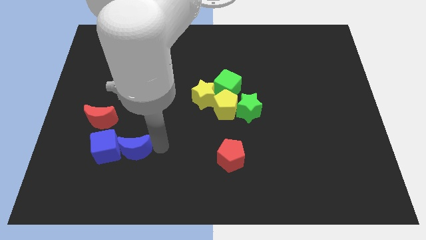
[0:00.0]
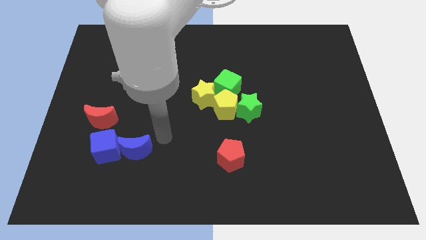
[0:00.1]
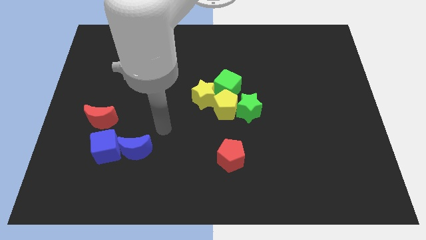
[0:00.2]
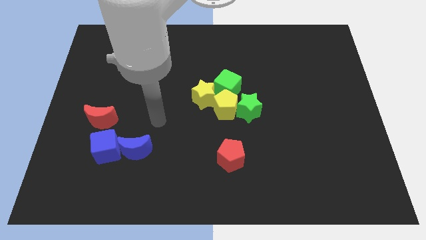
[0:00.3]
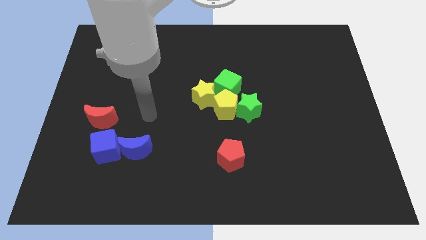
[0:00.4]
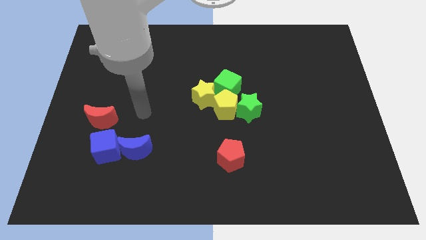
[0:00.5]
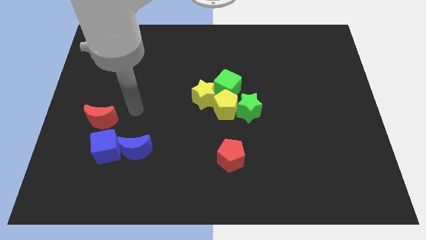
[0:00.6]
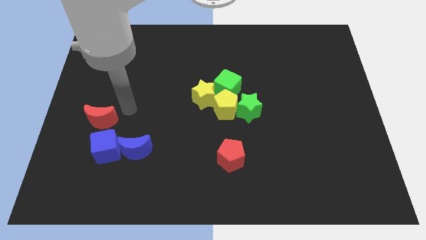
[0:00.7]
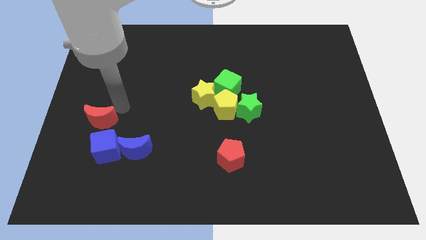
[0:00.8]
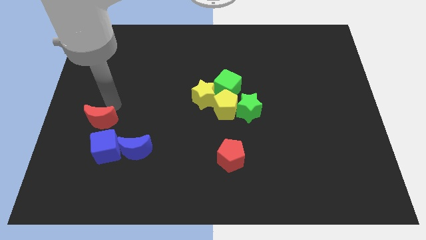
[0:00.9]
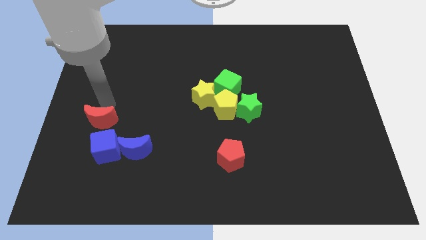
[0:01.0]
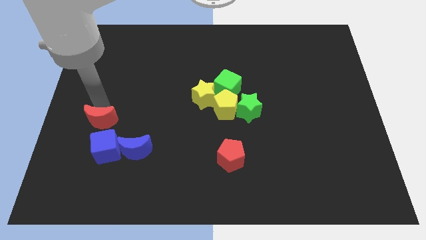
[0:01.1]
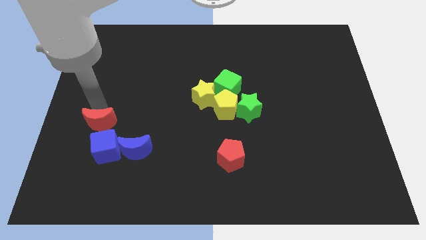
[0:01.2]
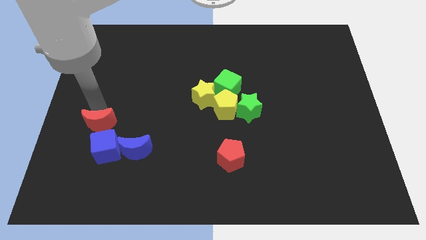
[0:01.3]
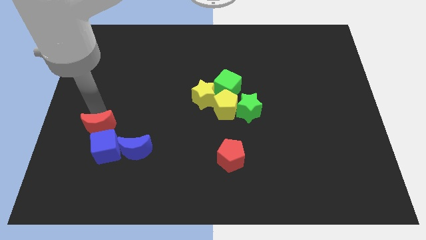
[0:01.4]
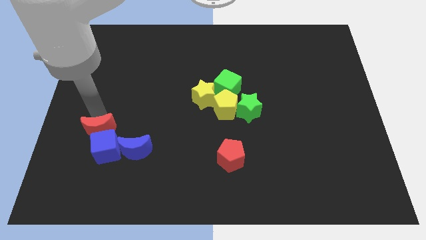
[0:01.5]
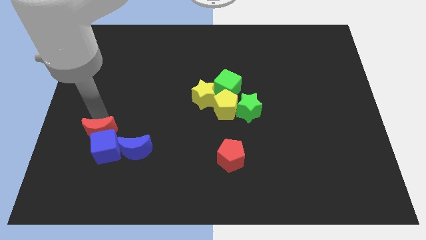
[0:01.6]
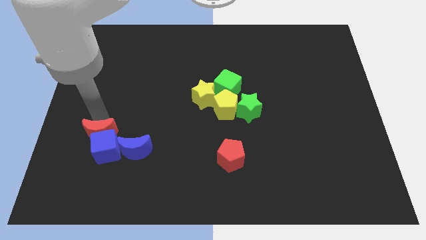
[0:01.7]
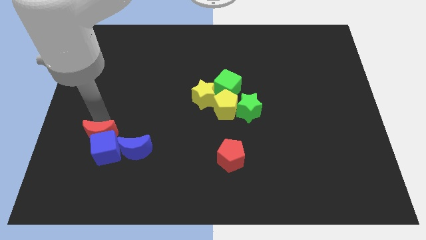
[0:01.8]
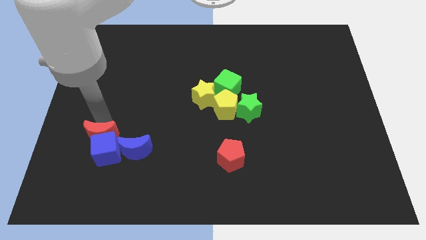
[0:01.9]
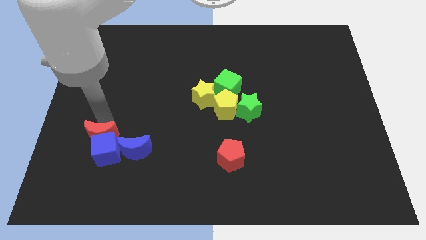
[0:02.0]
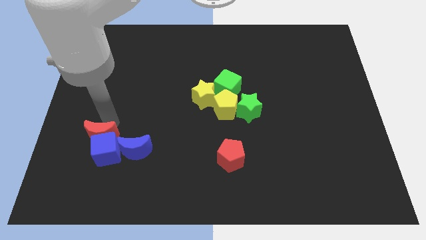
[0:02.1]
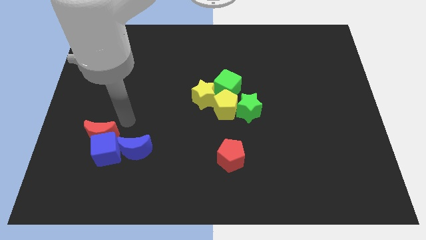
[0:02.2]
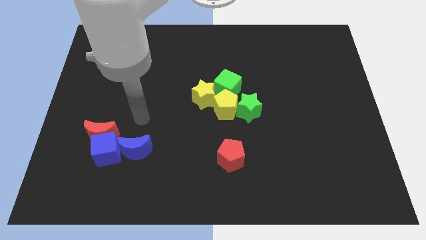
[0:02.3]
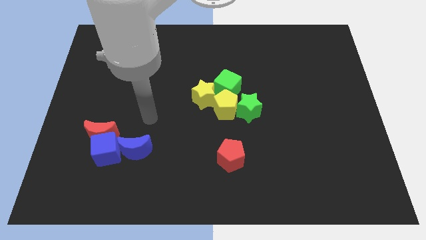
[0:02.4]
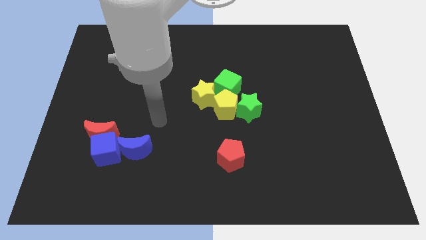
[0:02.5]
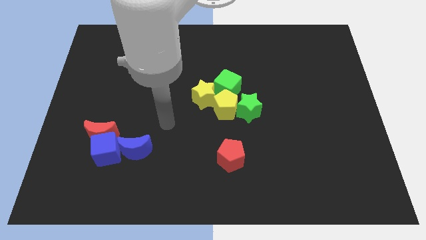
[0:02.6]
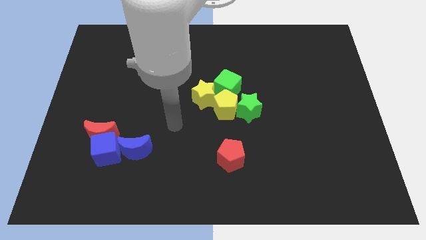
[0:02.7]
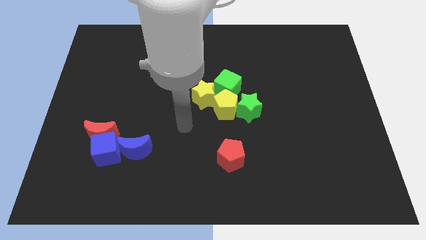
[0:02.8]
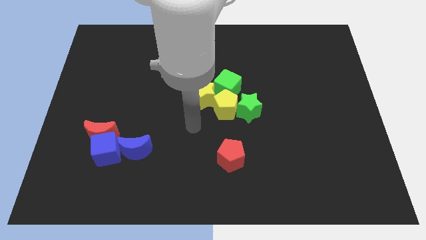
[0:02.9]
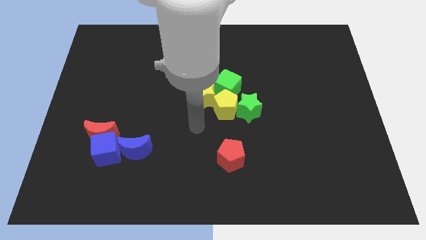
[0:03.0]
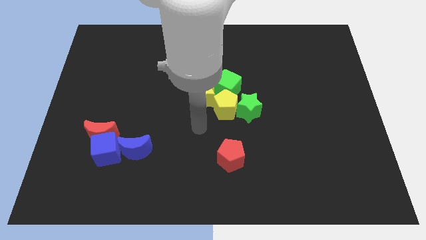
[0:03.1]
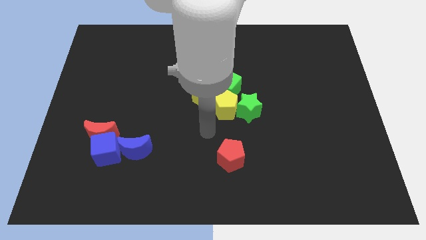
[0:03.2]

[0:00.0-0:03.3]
push the red crescent to the top of the blue cube

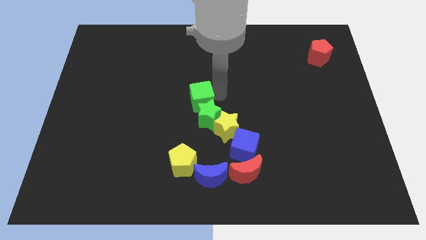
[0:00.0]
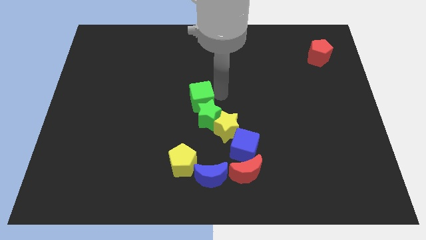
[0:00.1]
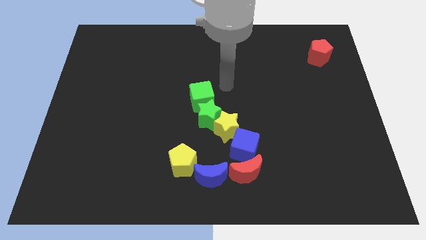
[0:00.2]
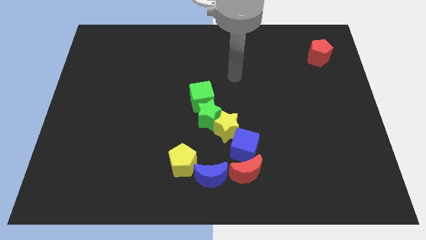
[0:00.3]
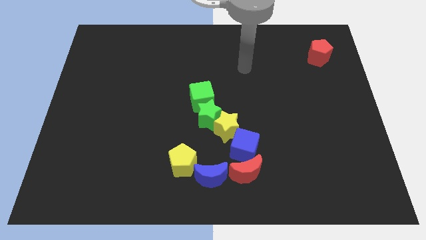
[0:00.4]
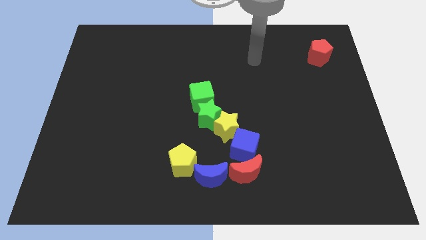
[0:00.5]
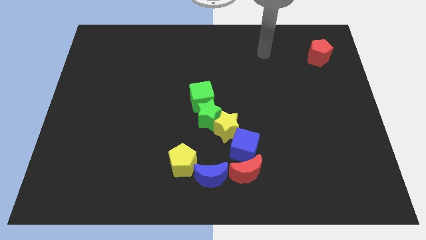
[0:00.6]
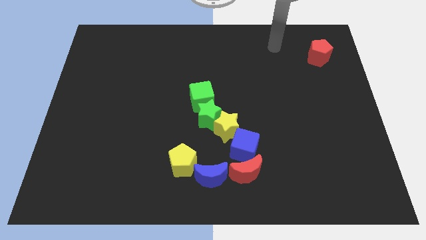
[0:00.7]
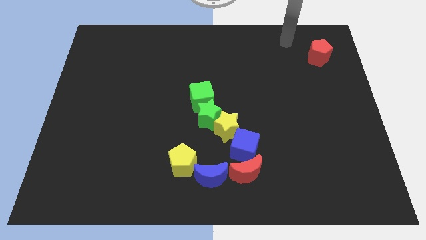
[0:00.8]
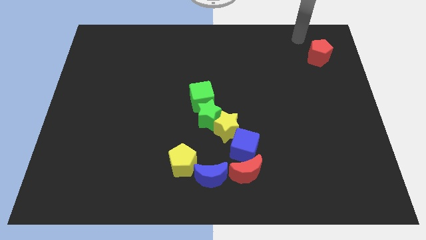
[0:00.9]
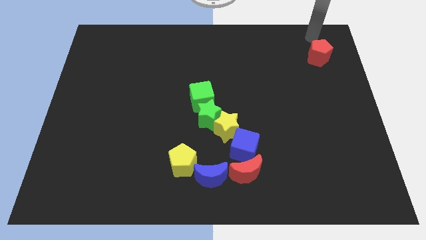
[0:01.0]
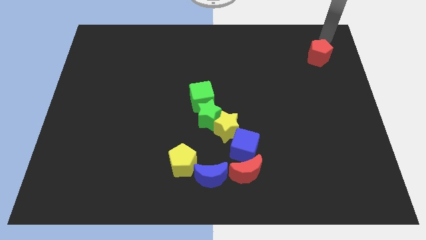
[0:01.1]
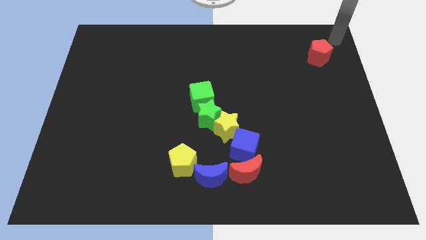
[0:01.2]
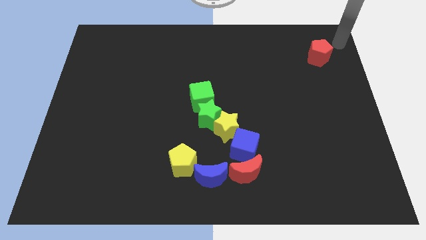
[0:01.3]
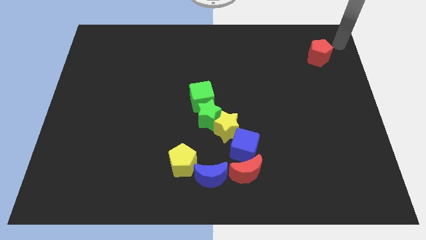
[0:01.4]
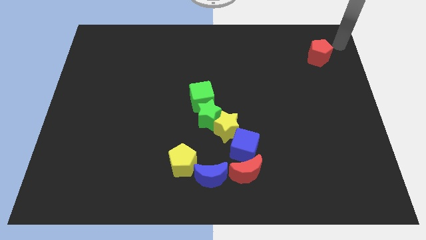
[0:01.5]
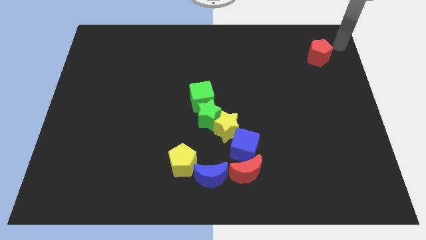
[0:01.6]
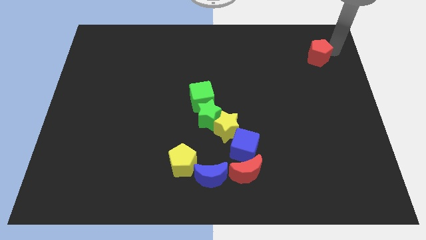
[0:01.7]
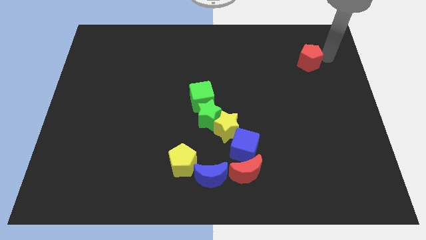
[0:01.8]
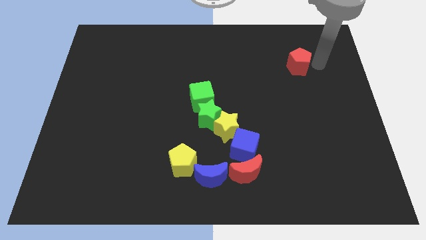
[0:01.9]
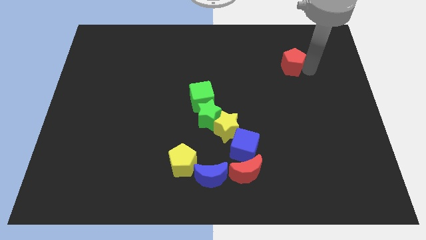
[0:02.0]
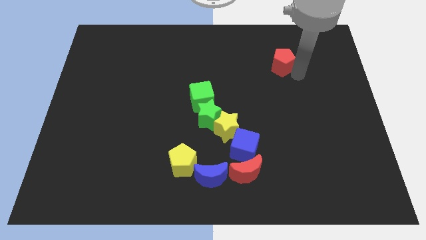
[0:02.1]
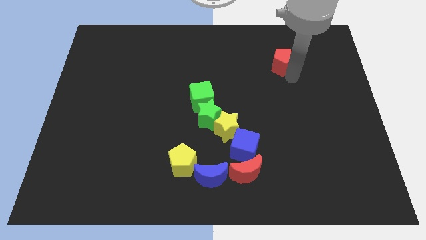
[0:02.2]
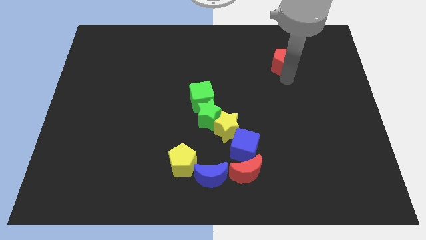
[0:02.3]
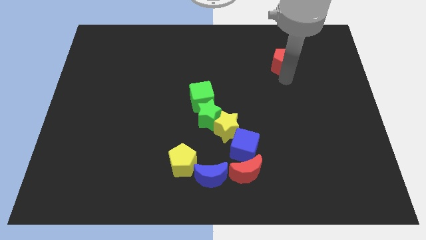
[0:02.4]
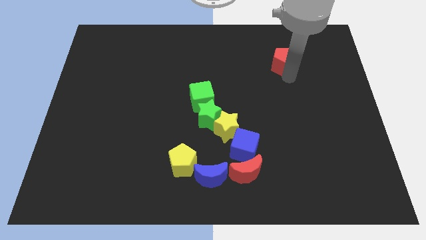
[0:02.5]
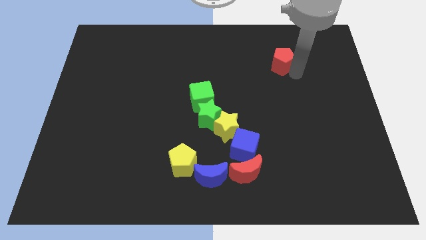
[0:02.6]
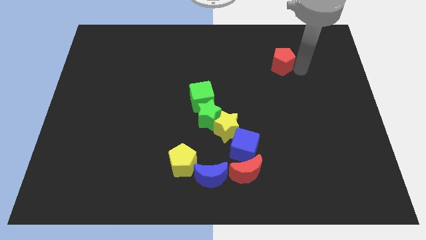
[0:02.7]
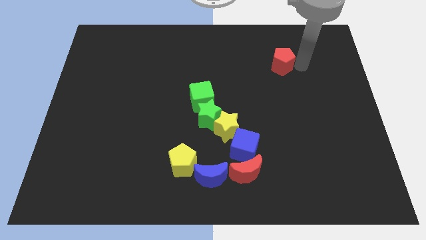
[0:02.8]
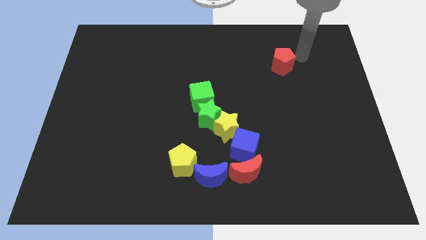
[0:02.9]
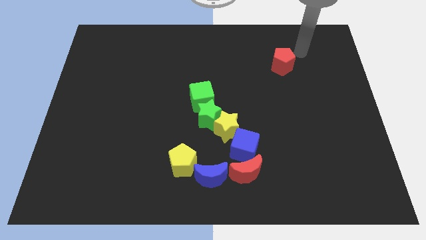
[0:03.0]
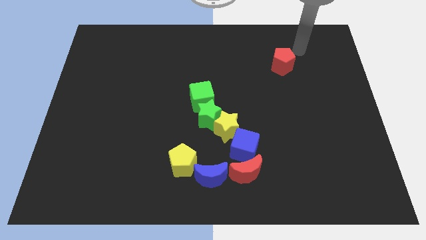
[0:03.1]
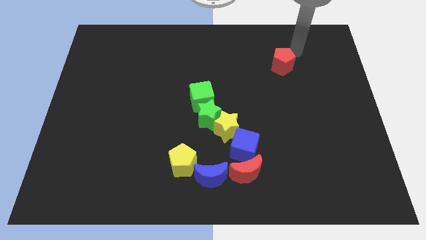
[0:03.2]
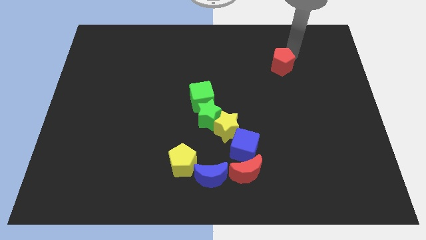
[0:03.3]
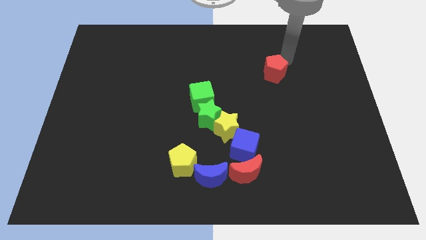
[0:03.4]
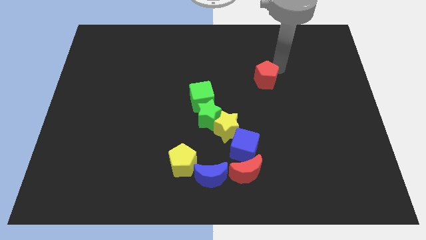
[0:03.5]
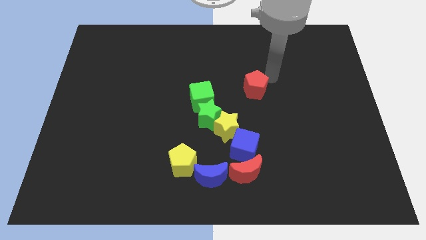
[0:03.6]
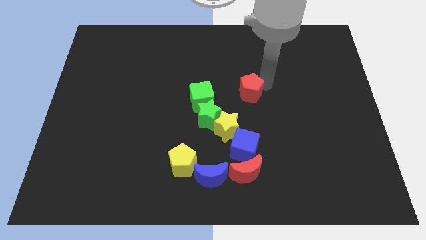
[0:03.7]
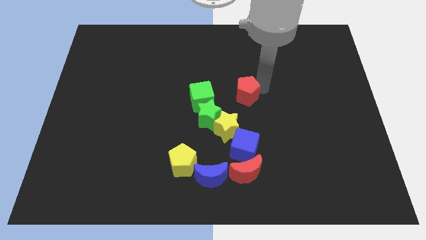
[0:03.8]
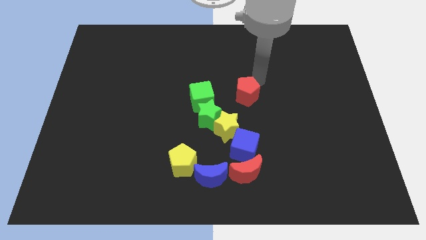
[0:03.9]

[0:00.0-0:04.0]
drag the red pentagon adjacent to the green cube

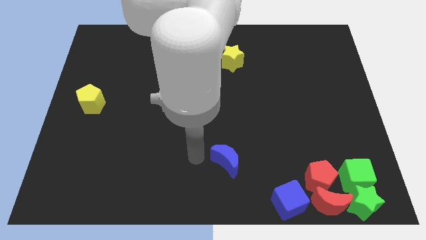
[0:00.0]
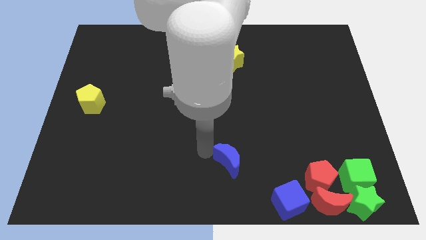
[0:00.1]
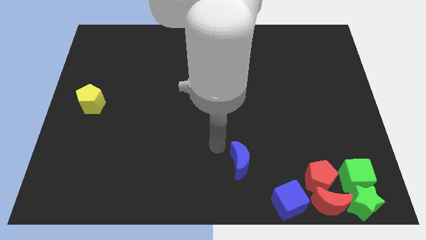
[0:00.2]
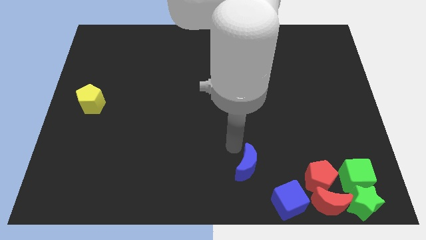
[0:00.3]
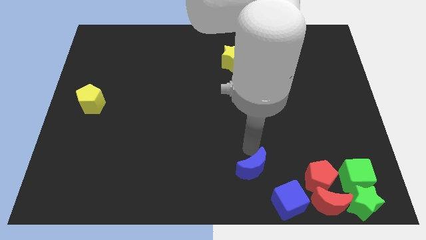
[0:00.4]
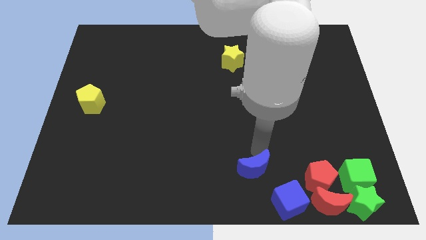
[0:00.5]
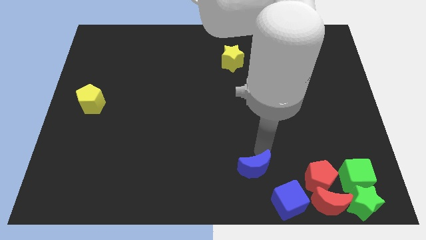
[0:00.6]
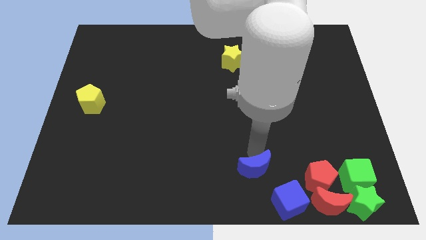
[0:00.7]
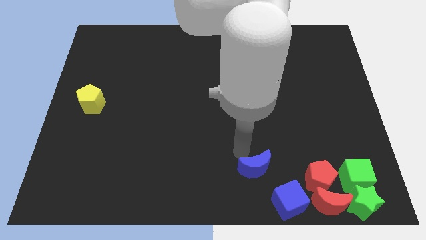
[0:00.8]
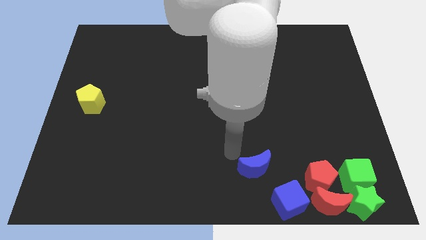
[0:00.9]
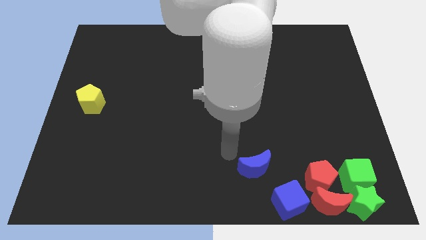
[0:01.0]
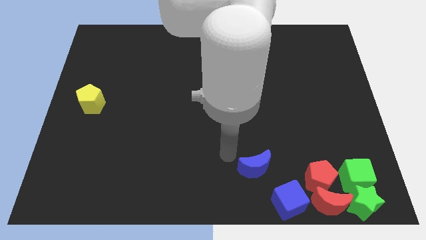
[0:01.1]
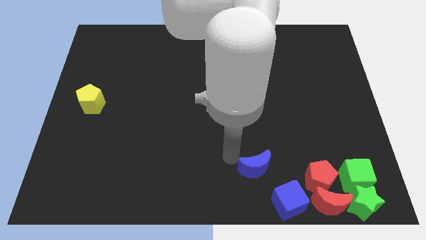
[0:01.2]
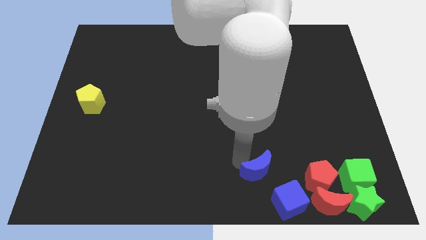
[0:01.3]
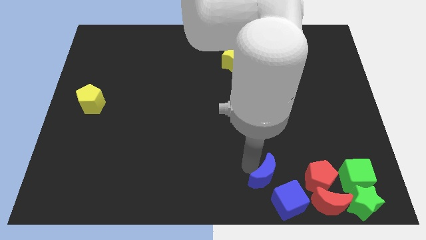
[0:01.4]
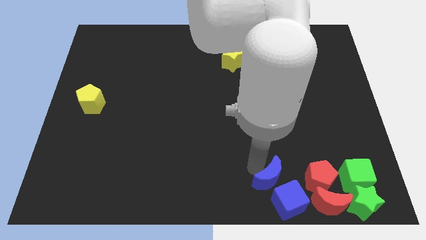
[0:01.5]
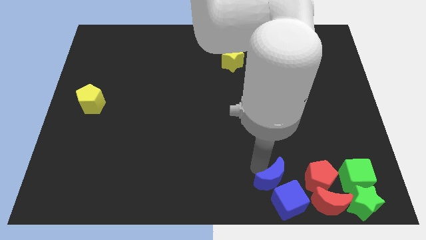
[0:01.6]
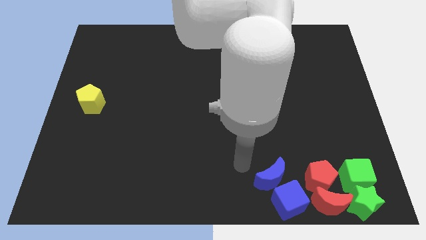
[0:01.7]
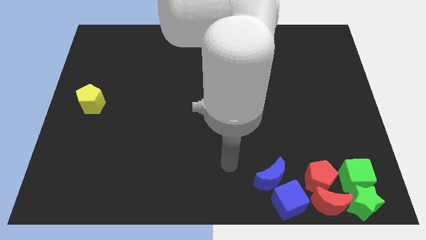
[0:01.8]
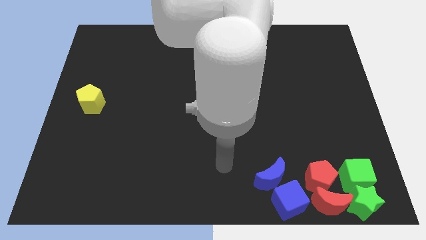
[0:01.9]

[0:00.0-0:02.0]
place the blue crescent above the blue cube
